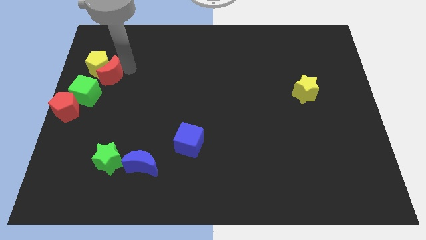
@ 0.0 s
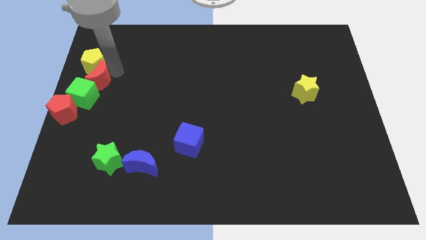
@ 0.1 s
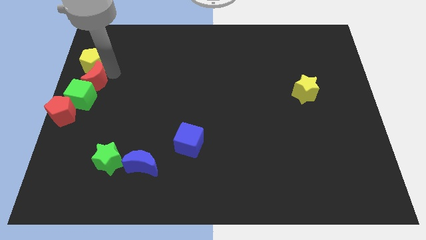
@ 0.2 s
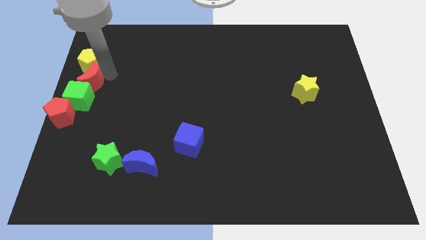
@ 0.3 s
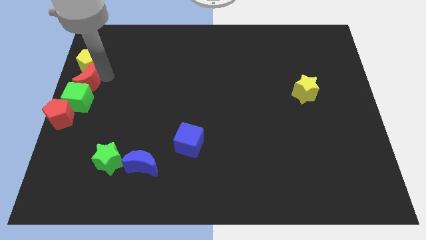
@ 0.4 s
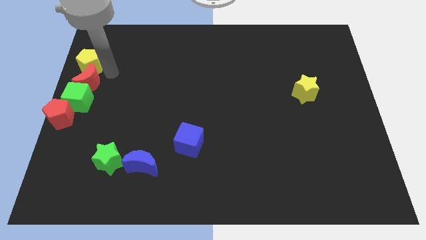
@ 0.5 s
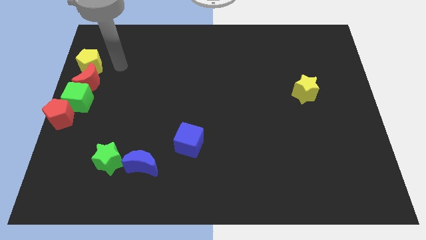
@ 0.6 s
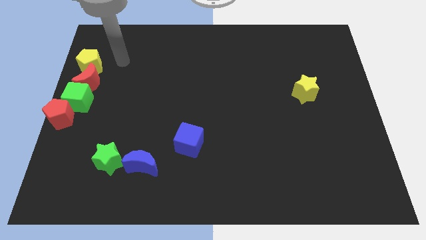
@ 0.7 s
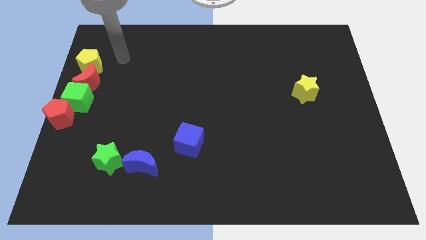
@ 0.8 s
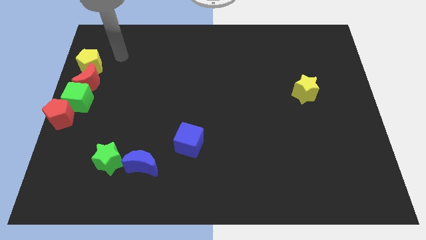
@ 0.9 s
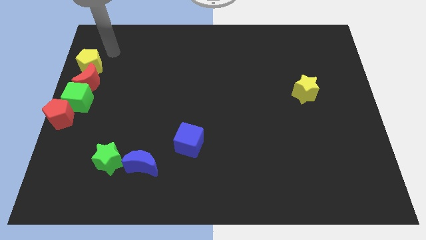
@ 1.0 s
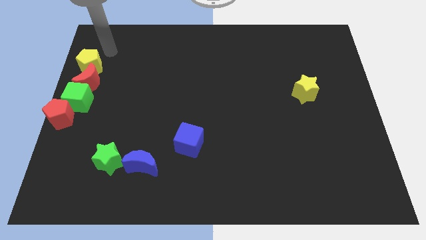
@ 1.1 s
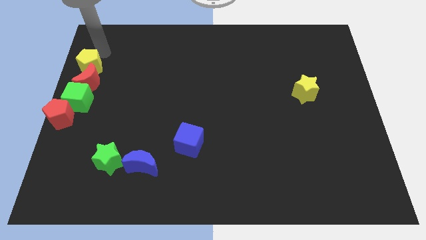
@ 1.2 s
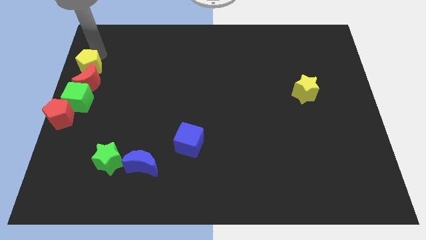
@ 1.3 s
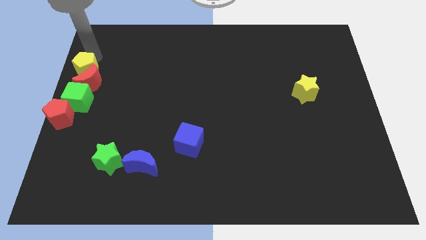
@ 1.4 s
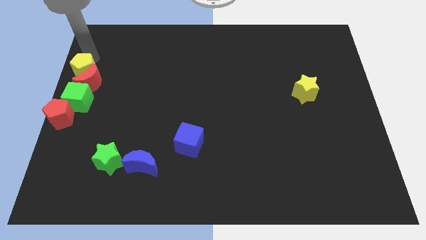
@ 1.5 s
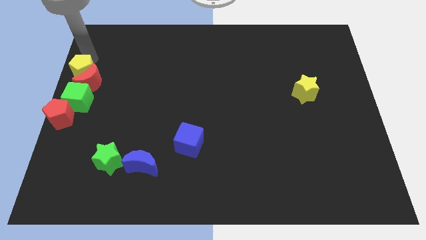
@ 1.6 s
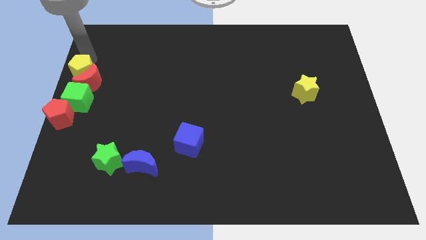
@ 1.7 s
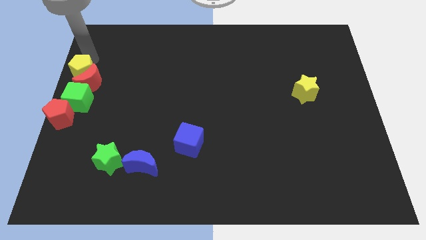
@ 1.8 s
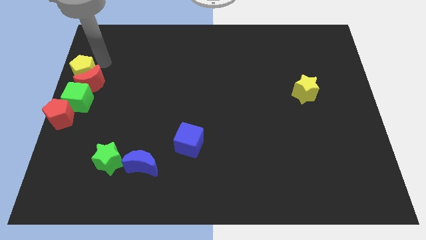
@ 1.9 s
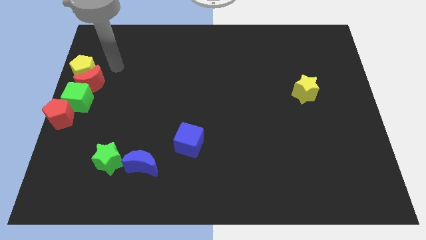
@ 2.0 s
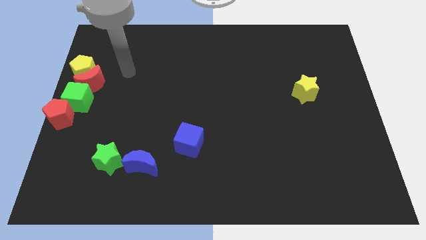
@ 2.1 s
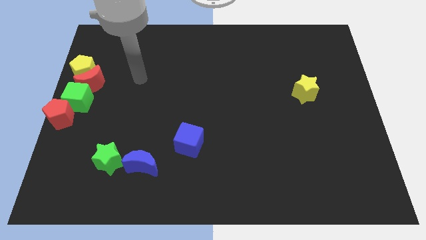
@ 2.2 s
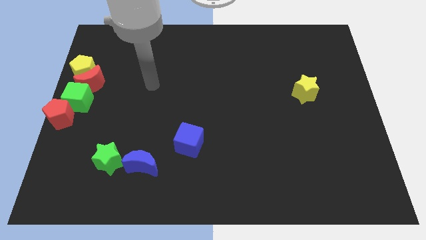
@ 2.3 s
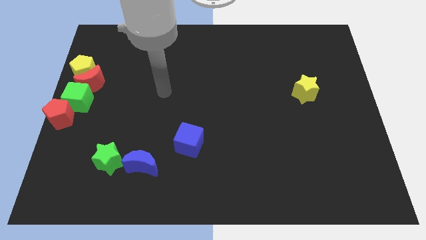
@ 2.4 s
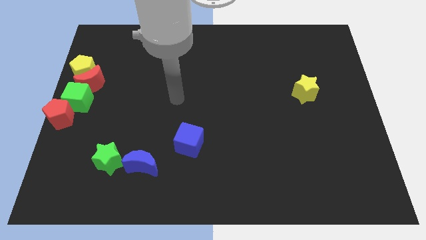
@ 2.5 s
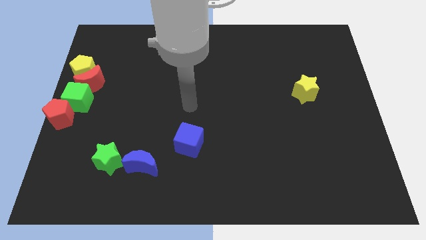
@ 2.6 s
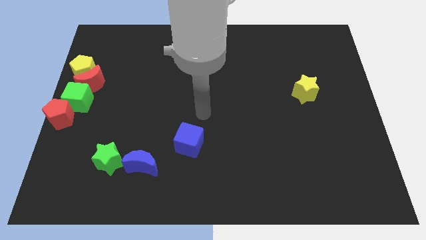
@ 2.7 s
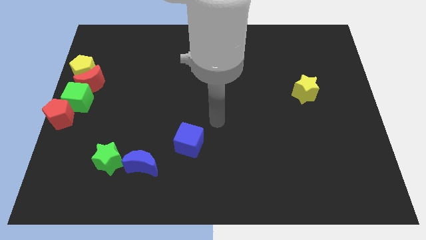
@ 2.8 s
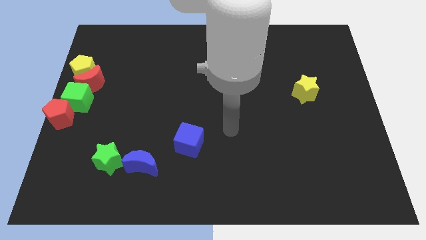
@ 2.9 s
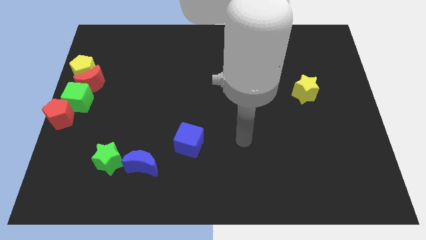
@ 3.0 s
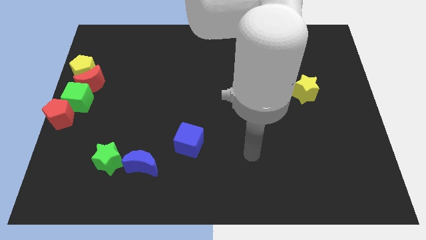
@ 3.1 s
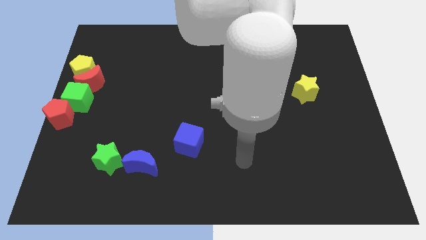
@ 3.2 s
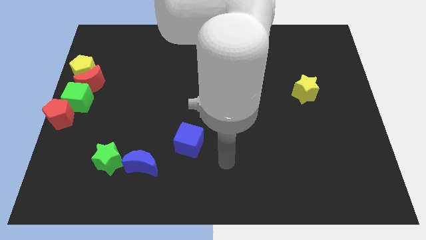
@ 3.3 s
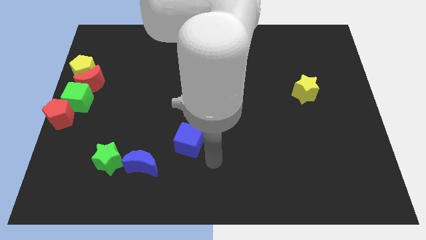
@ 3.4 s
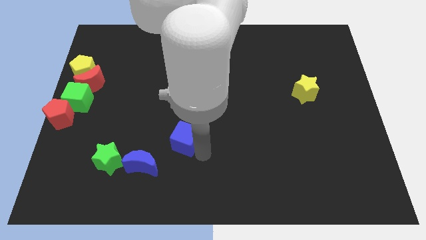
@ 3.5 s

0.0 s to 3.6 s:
place the arm diagonally to the blue cube

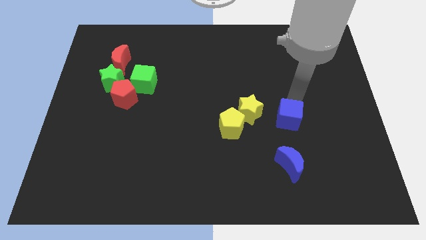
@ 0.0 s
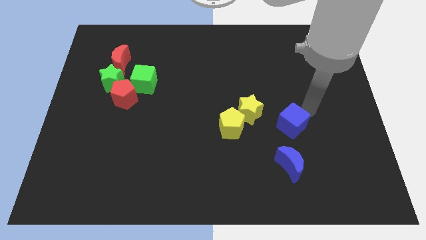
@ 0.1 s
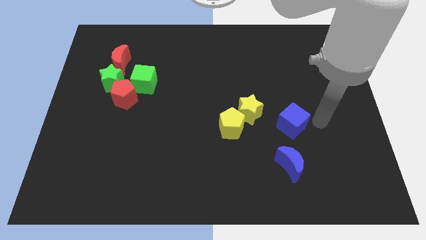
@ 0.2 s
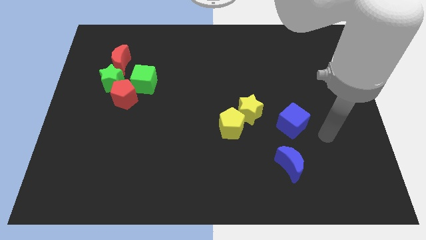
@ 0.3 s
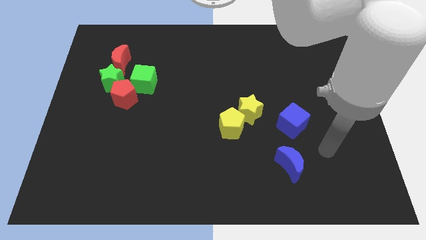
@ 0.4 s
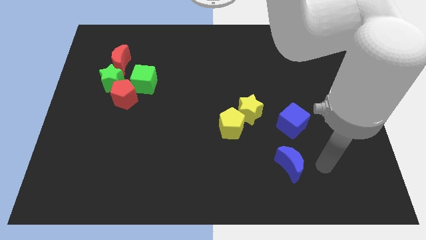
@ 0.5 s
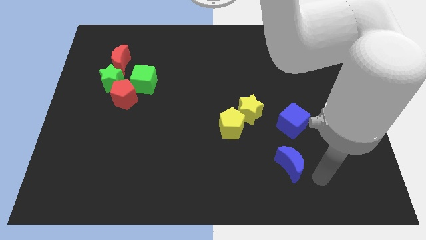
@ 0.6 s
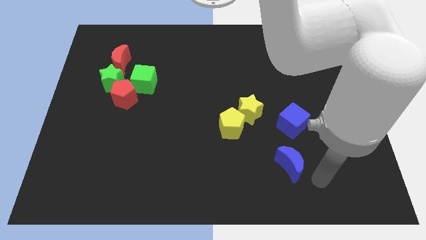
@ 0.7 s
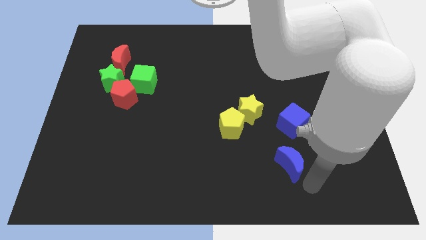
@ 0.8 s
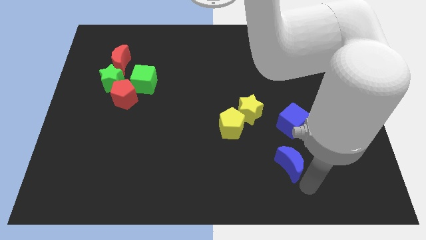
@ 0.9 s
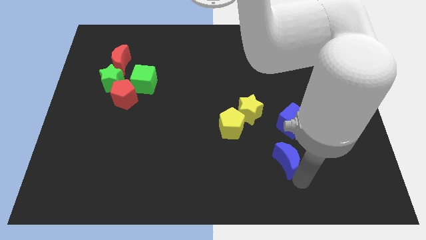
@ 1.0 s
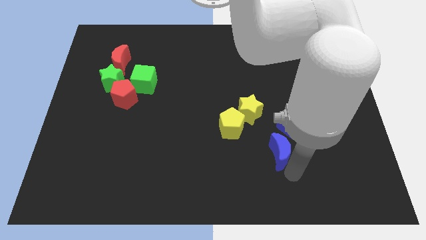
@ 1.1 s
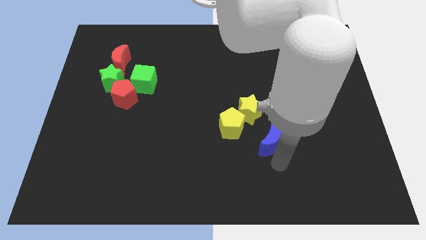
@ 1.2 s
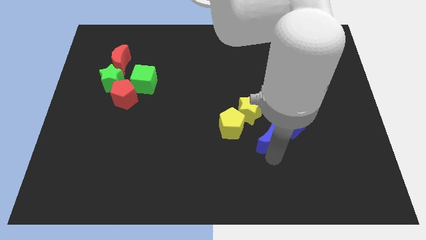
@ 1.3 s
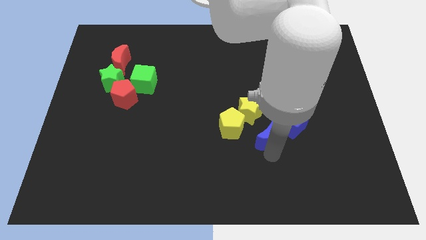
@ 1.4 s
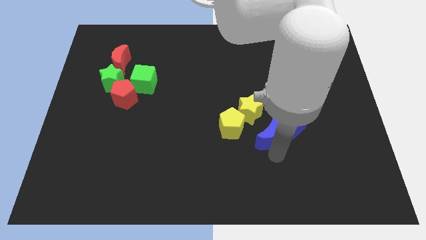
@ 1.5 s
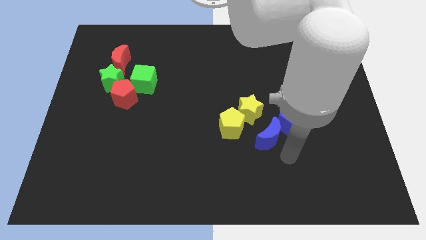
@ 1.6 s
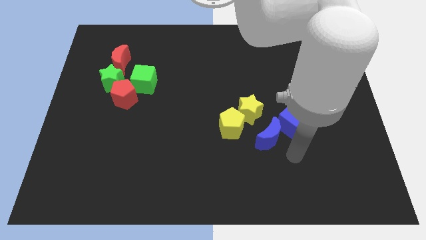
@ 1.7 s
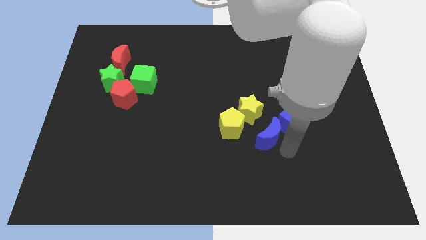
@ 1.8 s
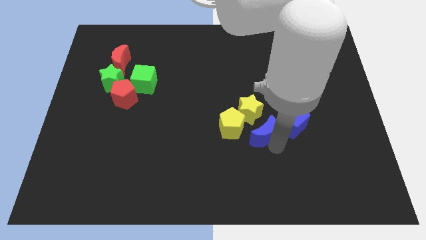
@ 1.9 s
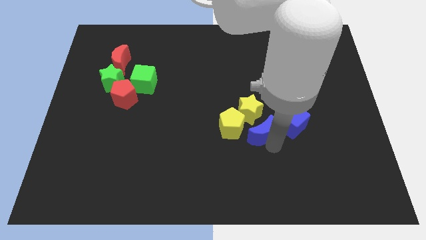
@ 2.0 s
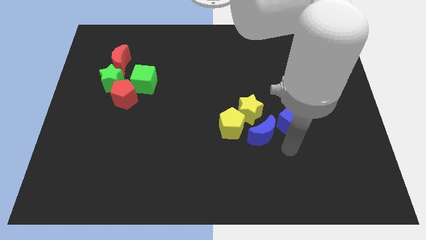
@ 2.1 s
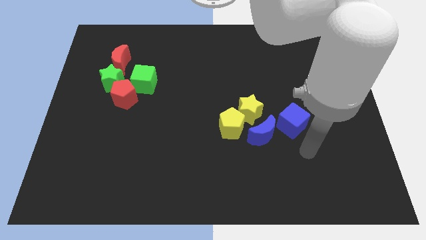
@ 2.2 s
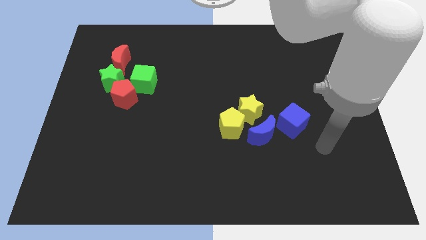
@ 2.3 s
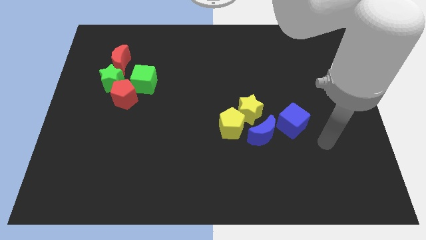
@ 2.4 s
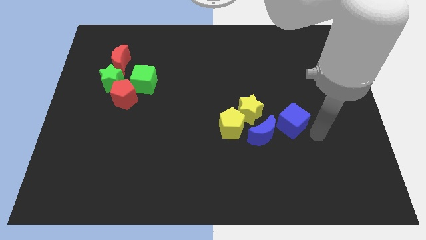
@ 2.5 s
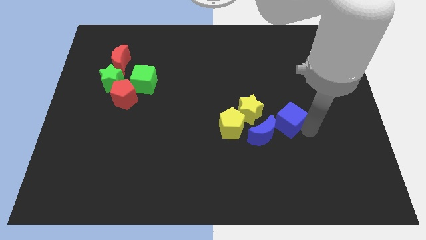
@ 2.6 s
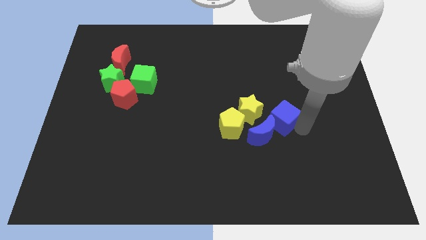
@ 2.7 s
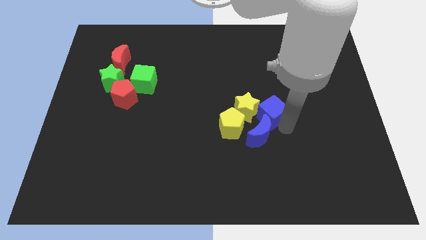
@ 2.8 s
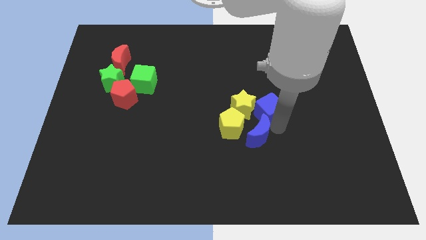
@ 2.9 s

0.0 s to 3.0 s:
move the blue cube and blue crescent into the yellow blocks

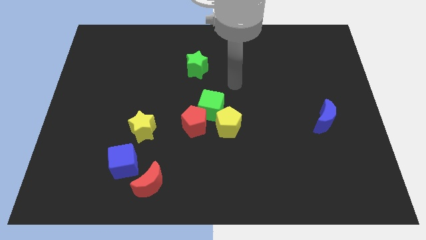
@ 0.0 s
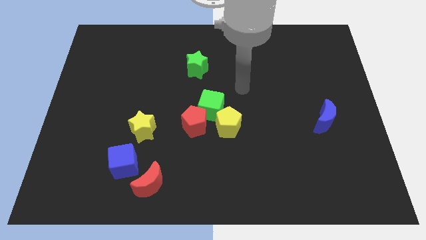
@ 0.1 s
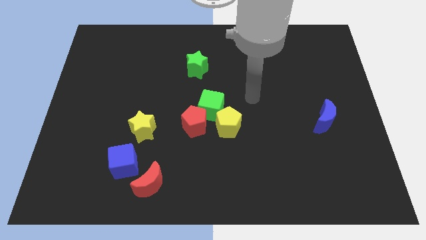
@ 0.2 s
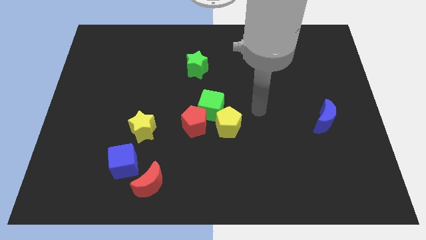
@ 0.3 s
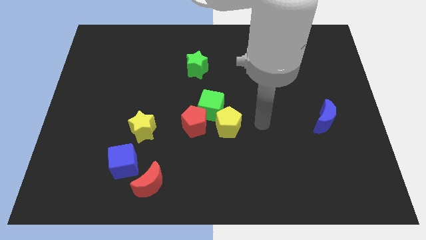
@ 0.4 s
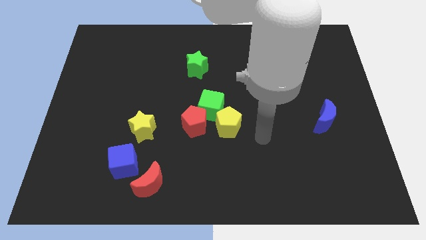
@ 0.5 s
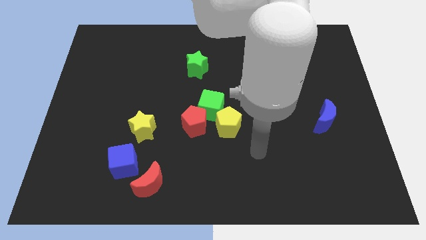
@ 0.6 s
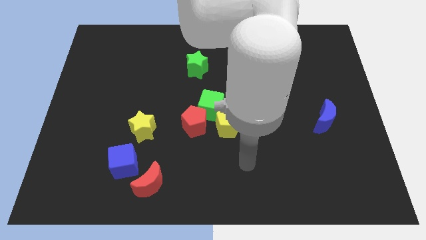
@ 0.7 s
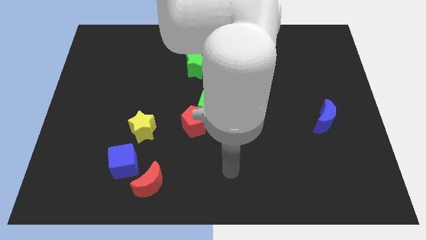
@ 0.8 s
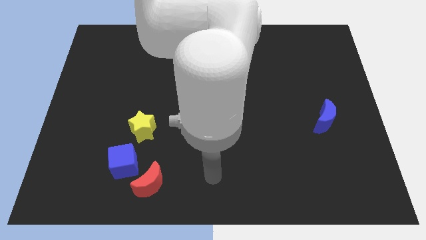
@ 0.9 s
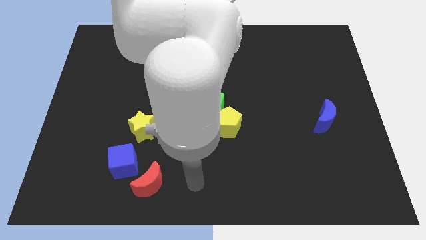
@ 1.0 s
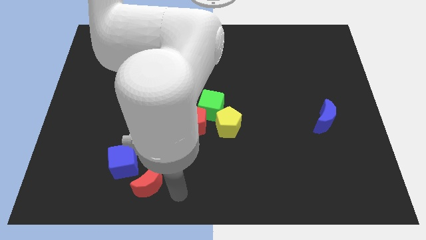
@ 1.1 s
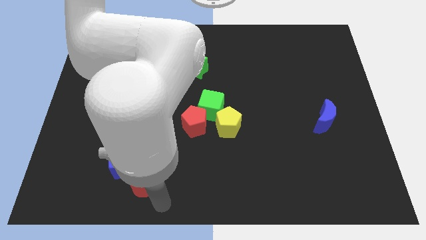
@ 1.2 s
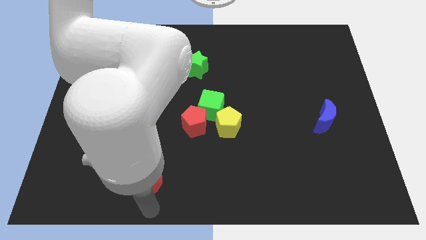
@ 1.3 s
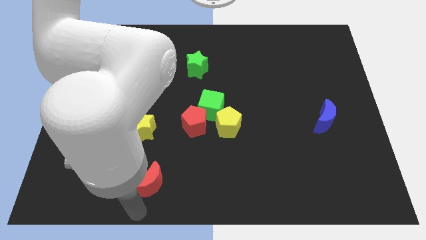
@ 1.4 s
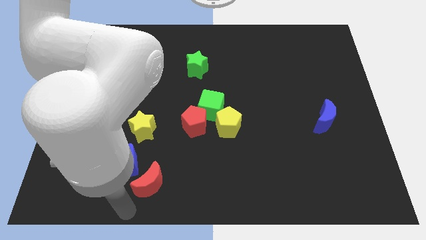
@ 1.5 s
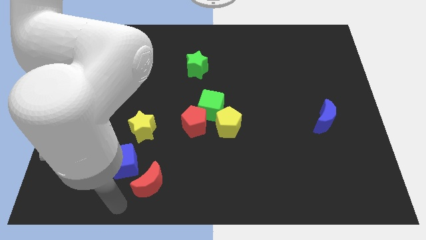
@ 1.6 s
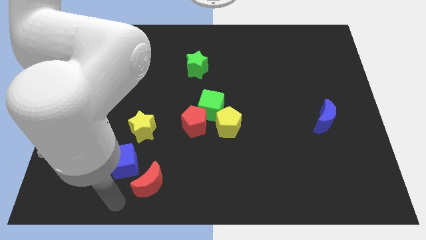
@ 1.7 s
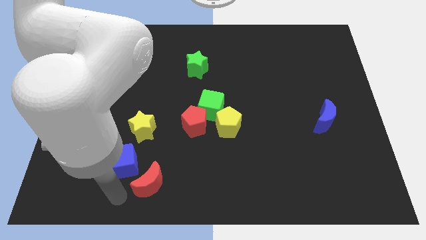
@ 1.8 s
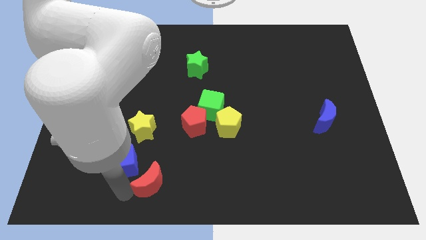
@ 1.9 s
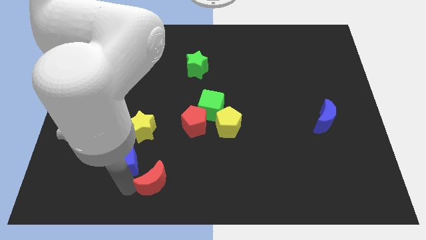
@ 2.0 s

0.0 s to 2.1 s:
tap red moon
